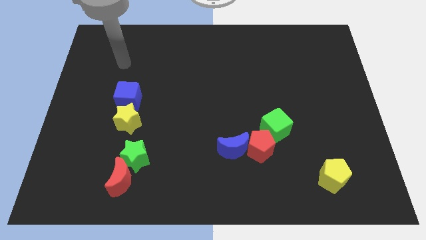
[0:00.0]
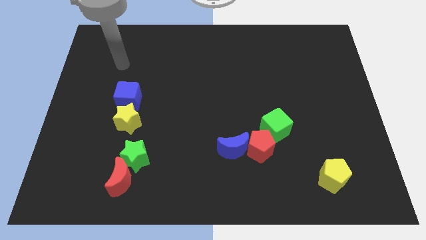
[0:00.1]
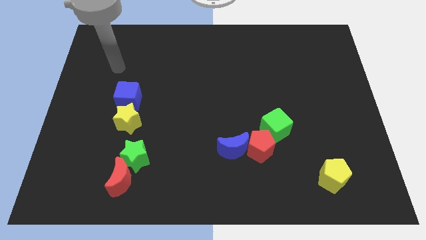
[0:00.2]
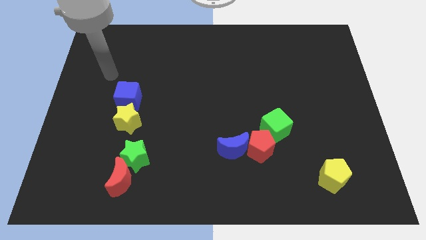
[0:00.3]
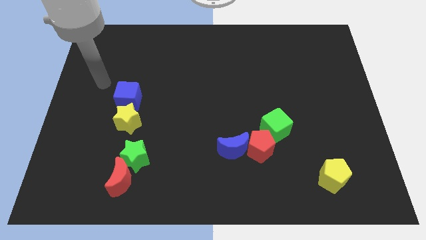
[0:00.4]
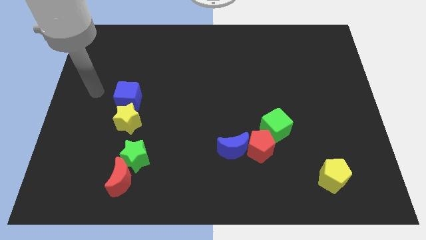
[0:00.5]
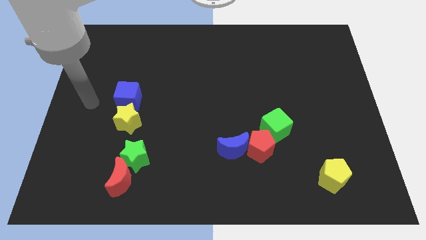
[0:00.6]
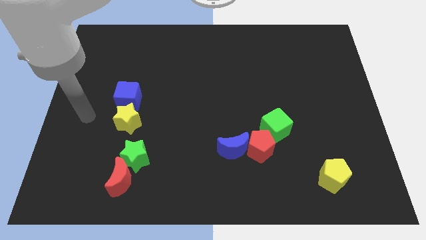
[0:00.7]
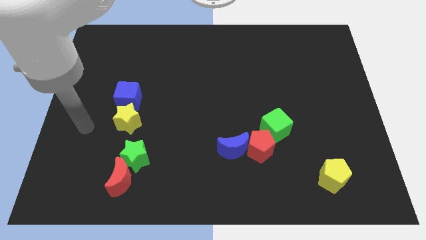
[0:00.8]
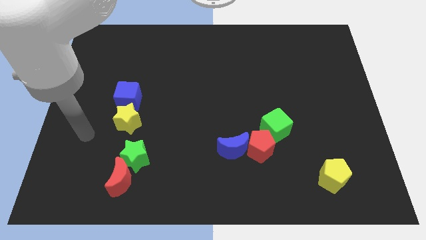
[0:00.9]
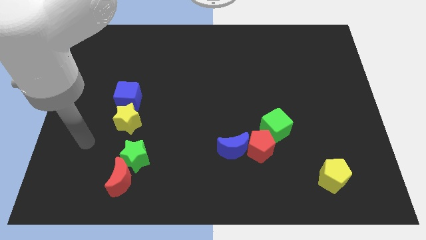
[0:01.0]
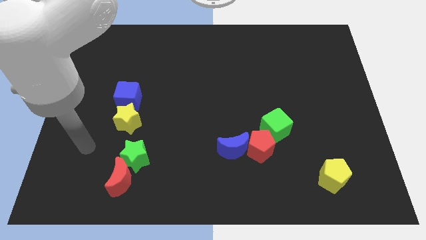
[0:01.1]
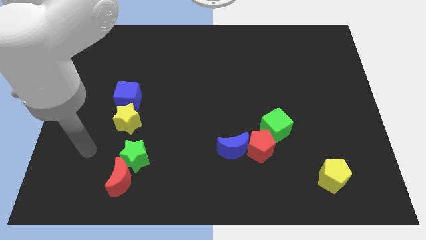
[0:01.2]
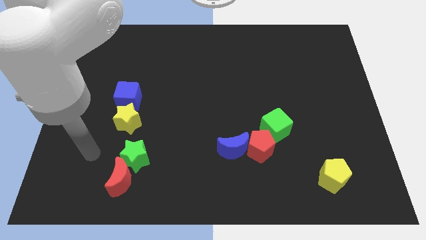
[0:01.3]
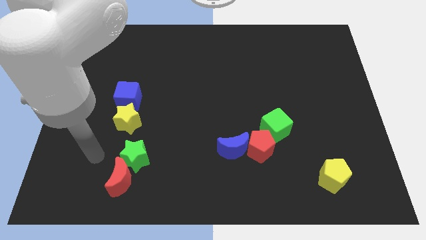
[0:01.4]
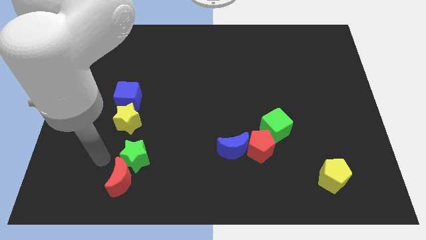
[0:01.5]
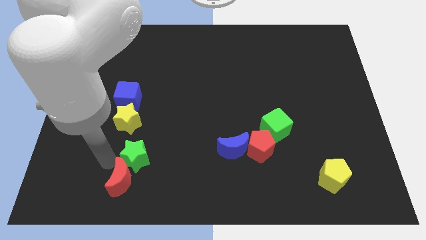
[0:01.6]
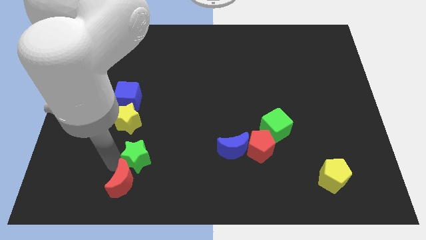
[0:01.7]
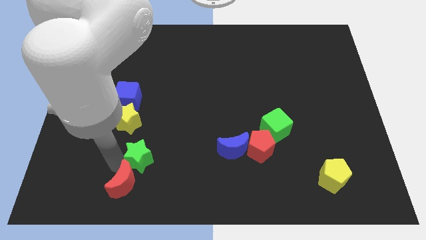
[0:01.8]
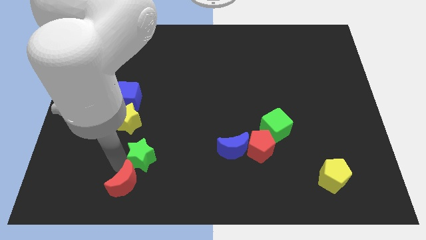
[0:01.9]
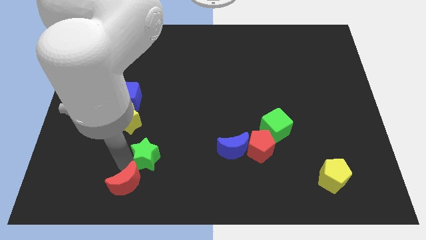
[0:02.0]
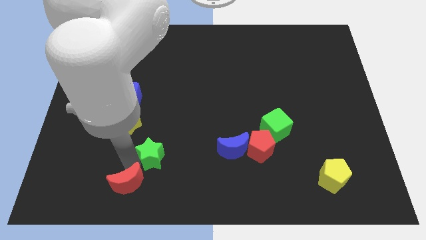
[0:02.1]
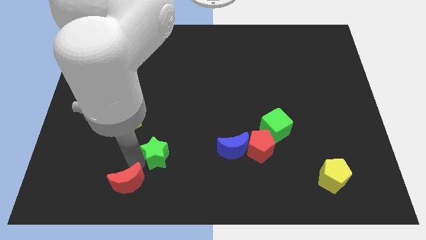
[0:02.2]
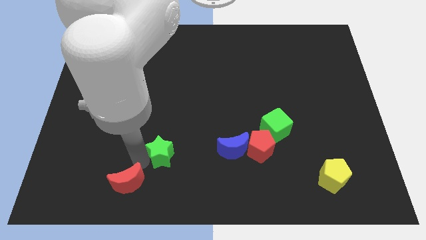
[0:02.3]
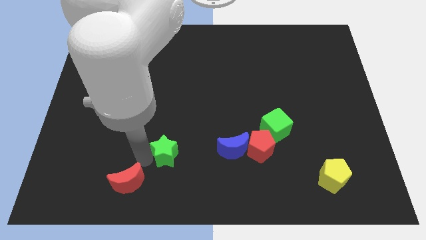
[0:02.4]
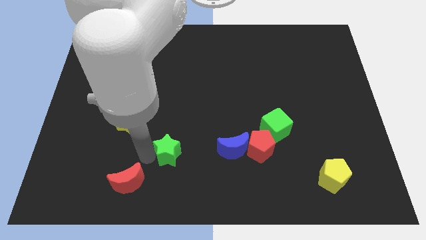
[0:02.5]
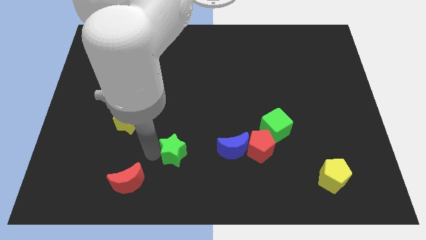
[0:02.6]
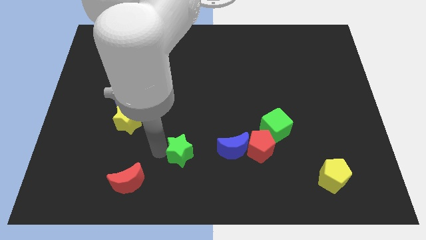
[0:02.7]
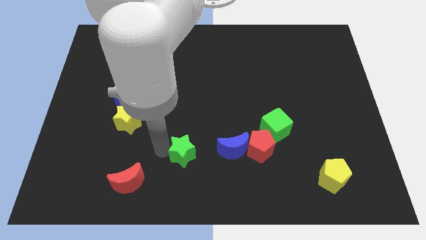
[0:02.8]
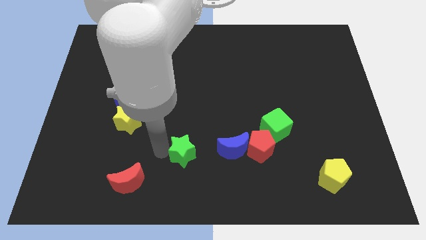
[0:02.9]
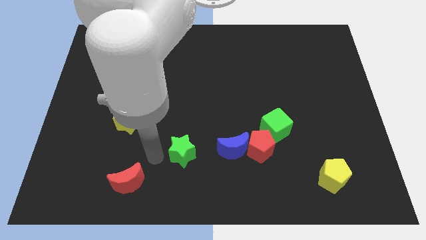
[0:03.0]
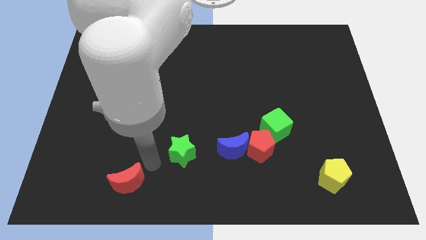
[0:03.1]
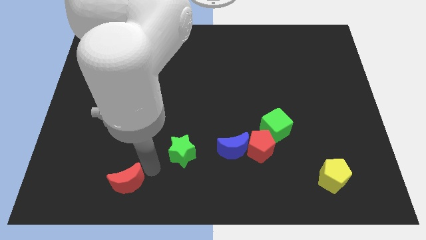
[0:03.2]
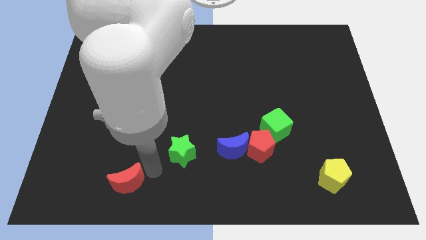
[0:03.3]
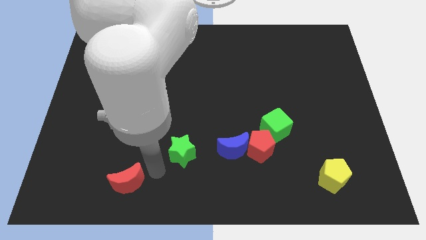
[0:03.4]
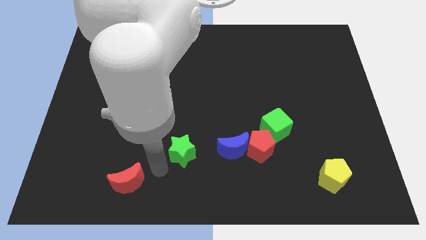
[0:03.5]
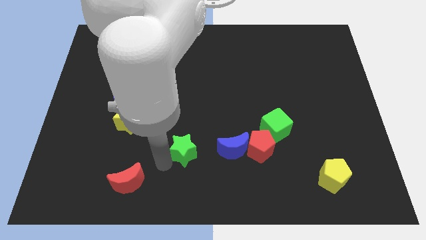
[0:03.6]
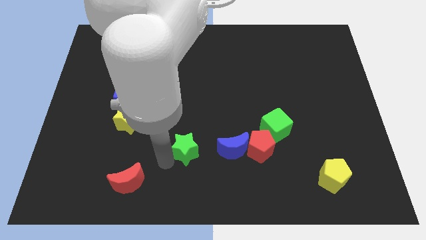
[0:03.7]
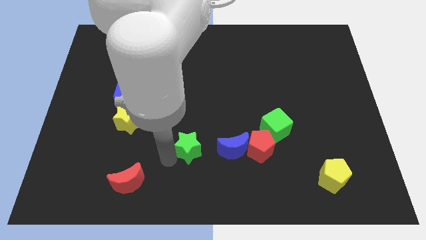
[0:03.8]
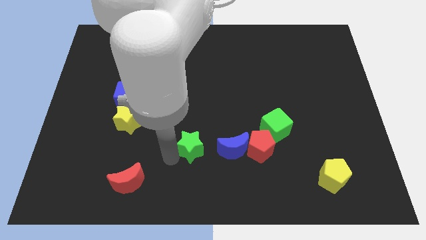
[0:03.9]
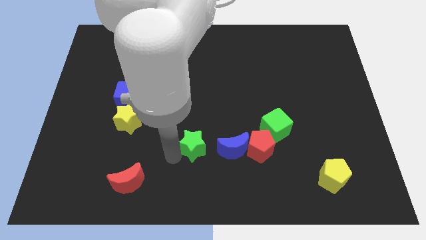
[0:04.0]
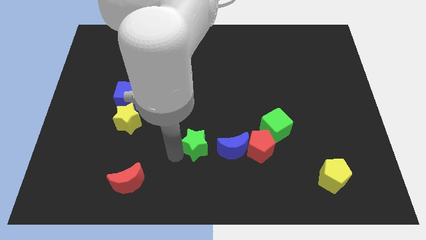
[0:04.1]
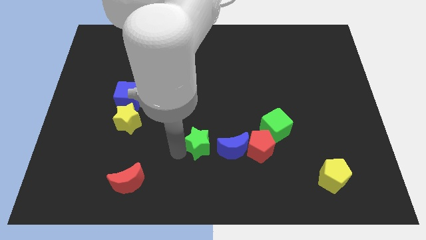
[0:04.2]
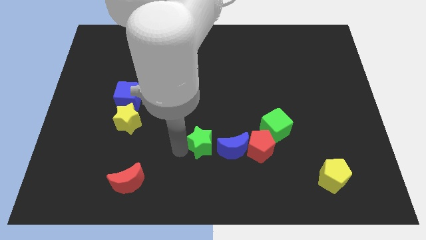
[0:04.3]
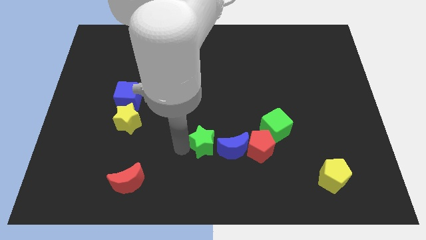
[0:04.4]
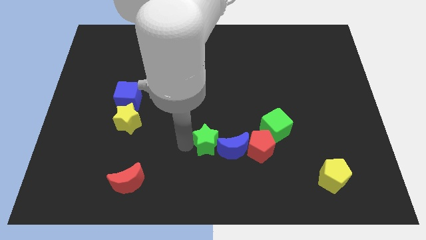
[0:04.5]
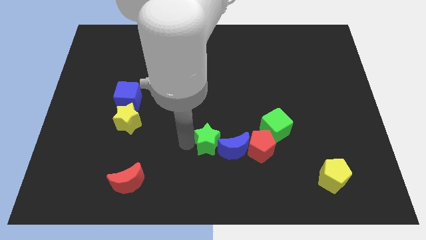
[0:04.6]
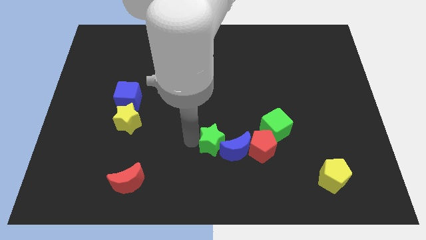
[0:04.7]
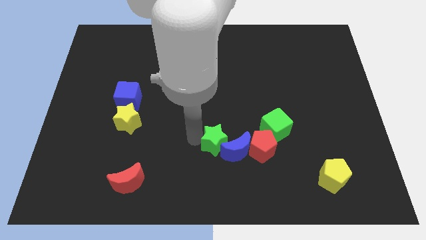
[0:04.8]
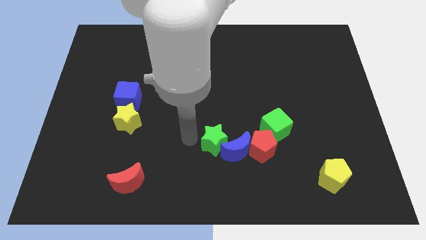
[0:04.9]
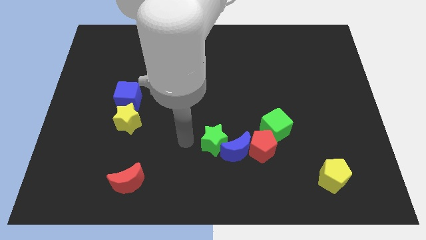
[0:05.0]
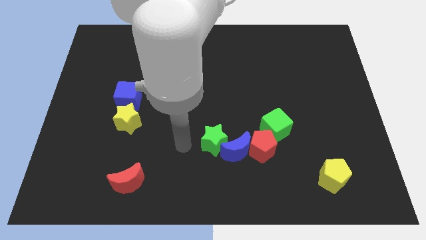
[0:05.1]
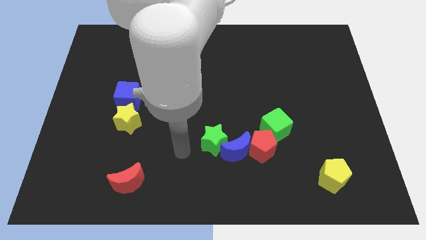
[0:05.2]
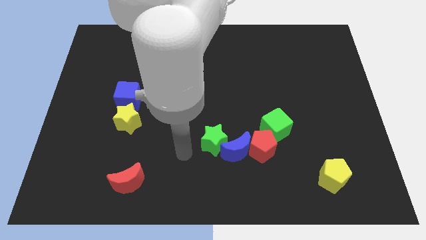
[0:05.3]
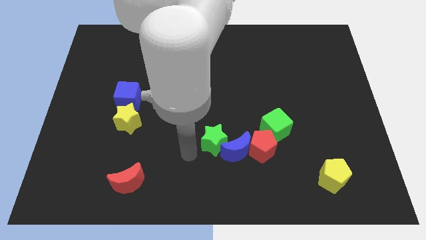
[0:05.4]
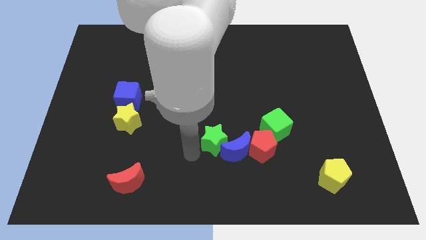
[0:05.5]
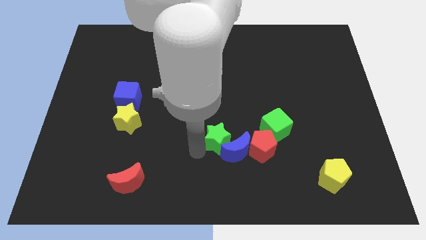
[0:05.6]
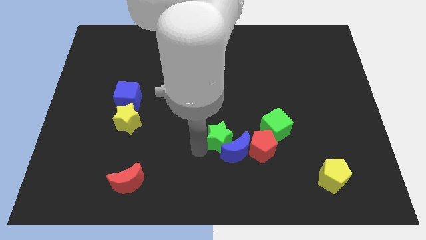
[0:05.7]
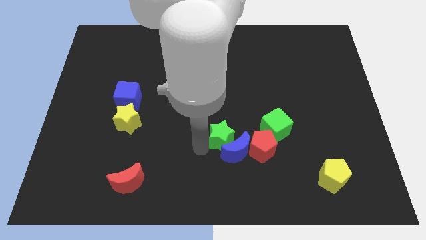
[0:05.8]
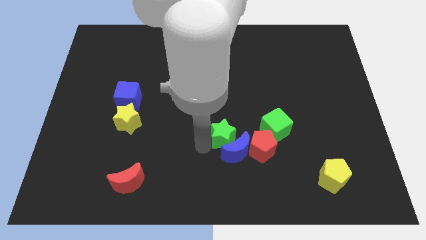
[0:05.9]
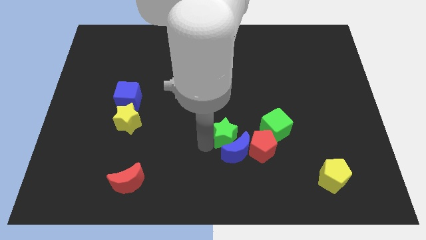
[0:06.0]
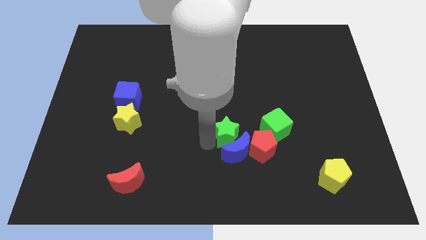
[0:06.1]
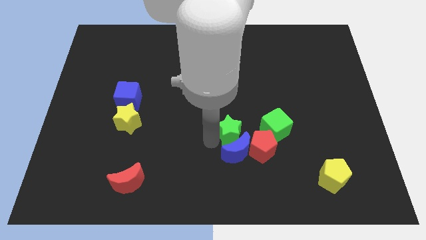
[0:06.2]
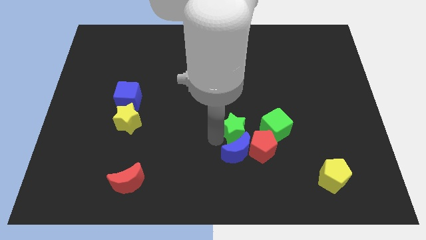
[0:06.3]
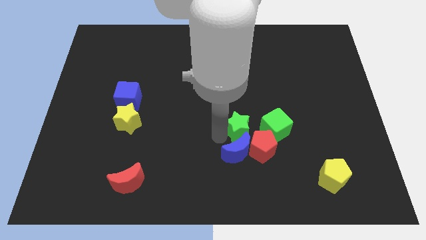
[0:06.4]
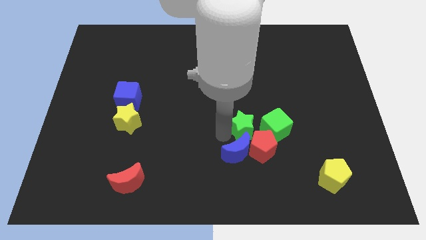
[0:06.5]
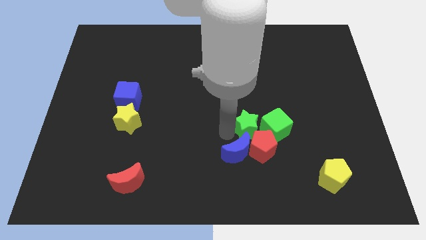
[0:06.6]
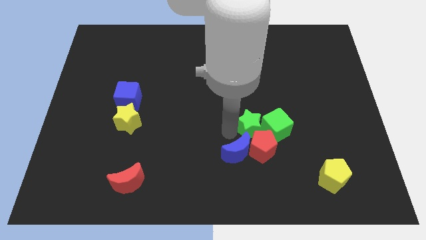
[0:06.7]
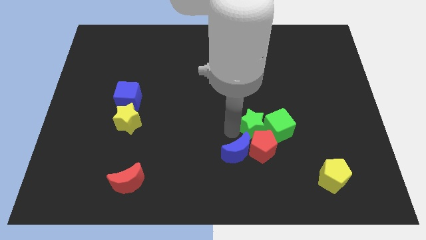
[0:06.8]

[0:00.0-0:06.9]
push the green star towards the red pentagon

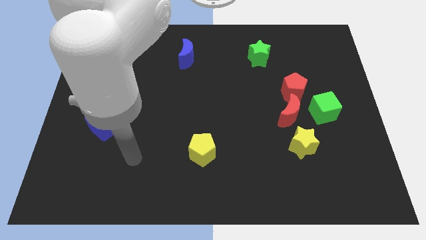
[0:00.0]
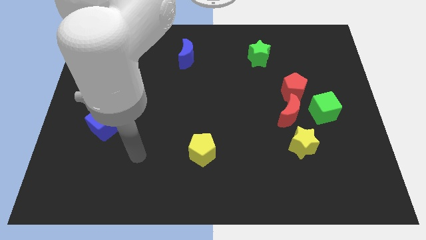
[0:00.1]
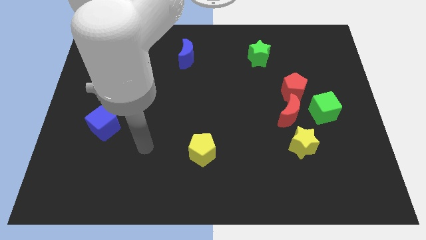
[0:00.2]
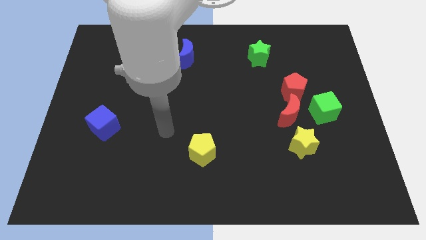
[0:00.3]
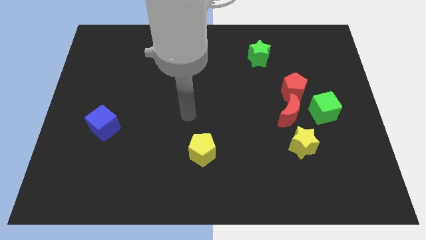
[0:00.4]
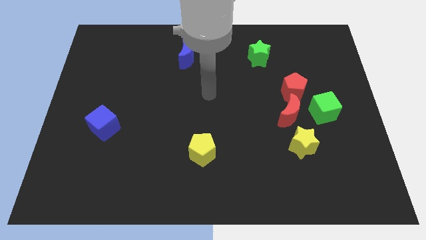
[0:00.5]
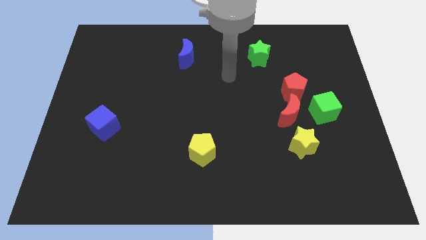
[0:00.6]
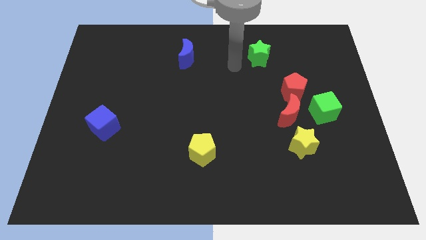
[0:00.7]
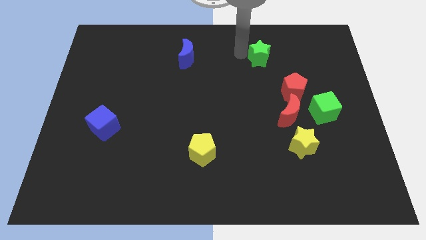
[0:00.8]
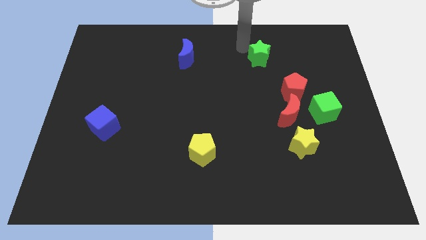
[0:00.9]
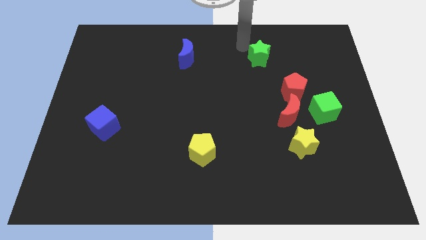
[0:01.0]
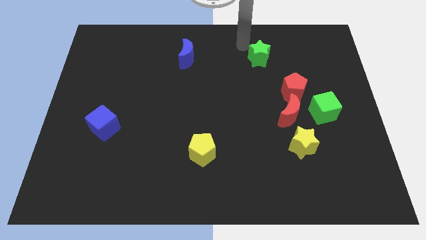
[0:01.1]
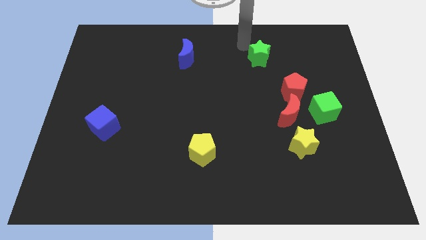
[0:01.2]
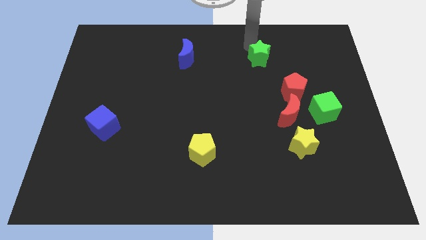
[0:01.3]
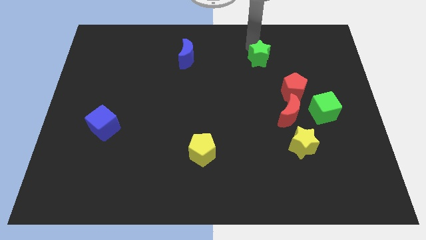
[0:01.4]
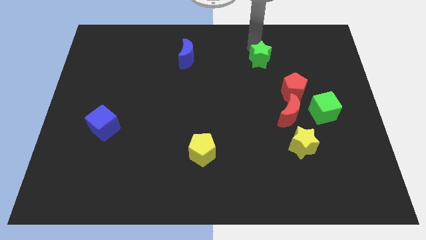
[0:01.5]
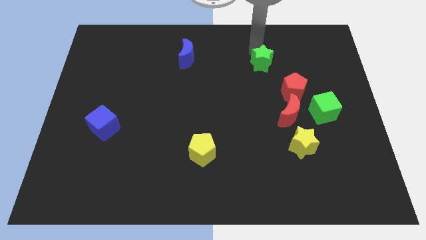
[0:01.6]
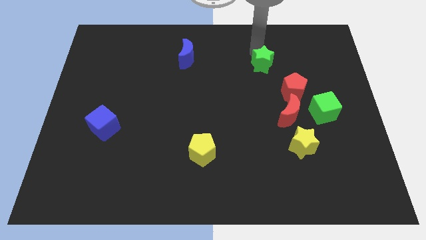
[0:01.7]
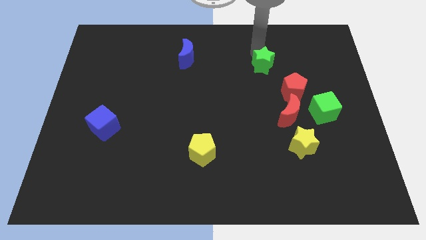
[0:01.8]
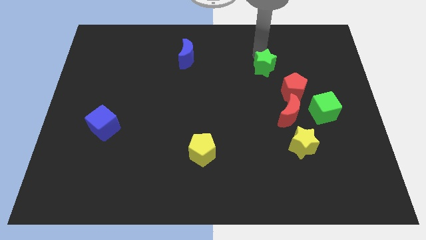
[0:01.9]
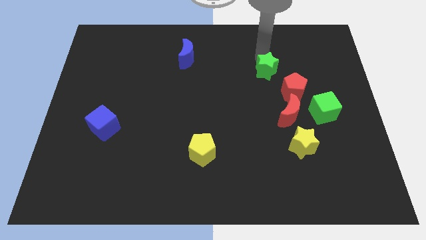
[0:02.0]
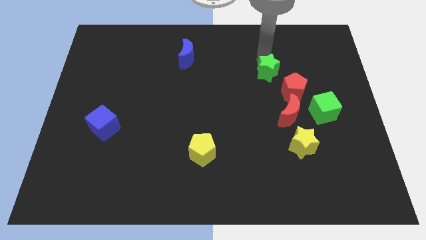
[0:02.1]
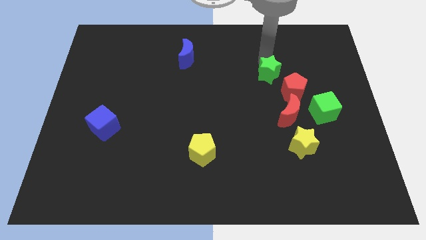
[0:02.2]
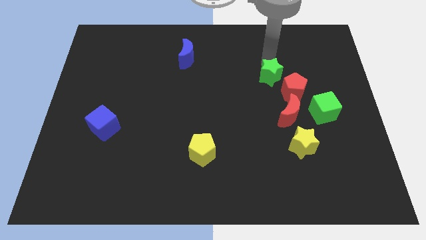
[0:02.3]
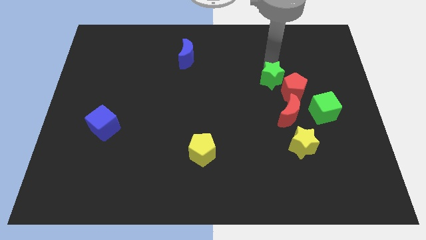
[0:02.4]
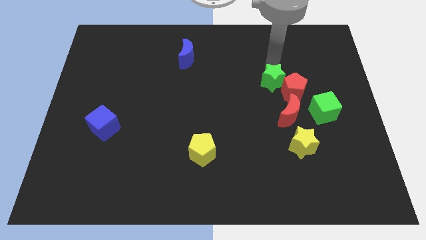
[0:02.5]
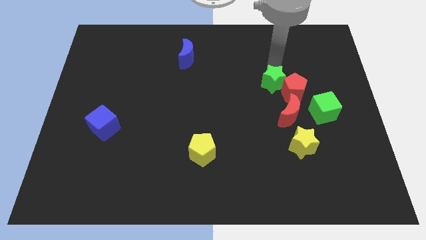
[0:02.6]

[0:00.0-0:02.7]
slide the green star towards the red pentagon
